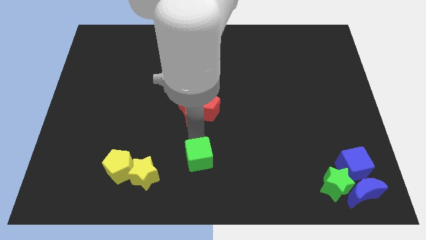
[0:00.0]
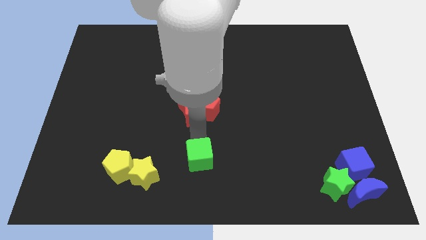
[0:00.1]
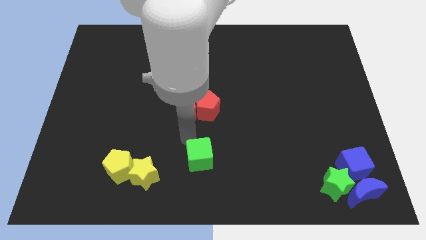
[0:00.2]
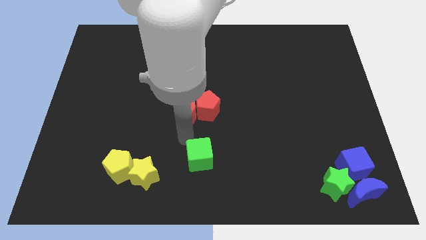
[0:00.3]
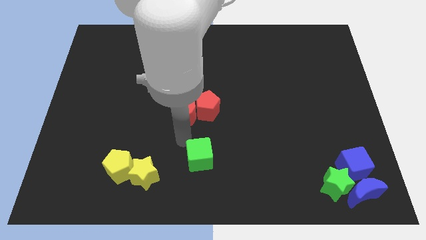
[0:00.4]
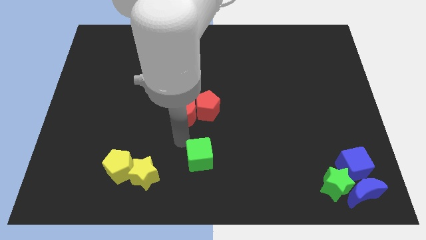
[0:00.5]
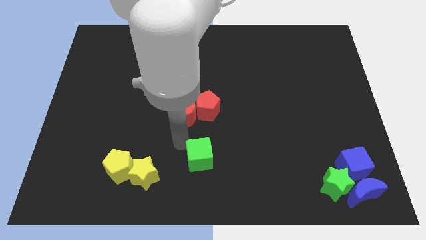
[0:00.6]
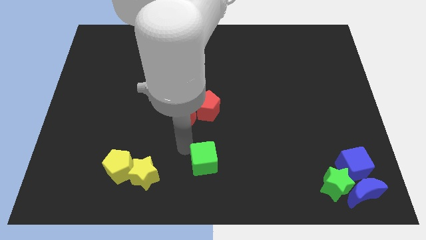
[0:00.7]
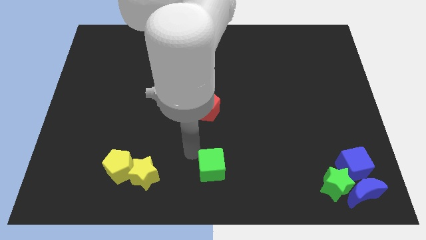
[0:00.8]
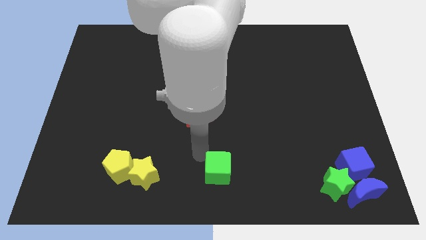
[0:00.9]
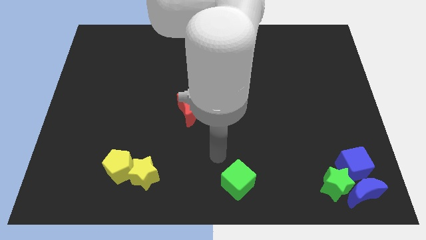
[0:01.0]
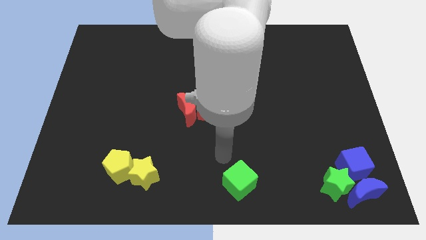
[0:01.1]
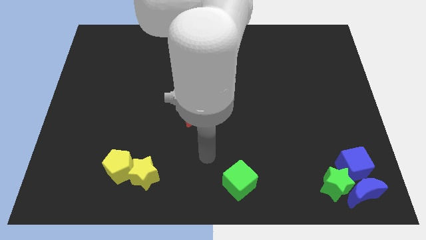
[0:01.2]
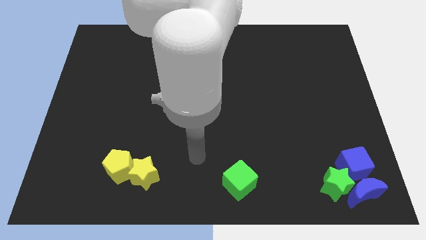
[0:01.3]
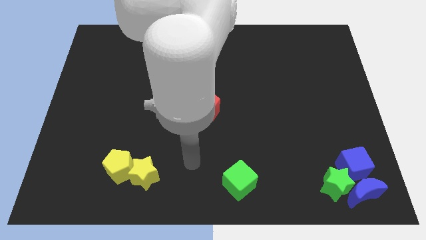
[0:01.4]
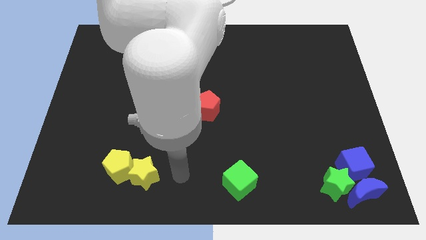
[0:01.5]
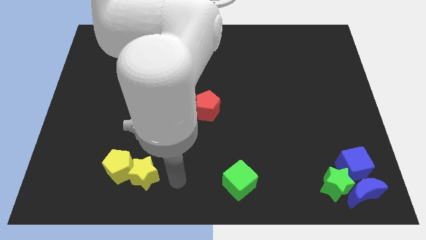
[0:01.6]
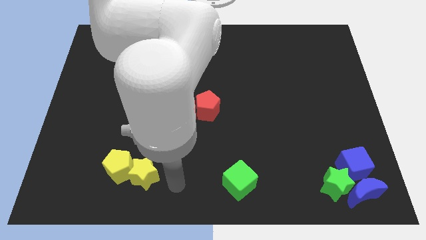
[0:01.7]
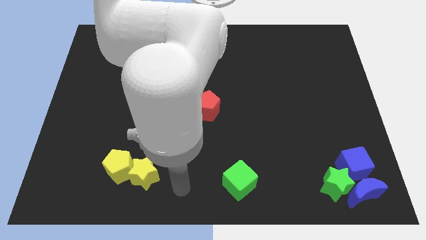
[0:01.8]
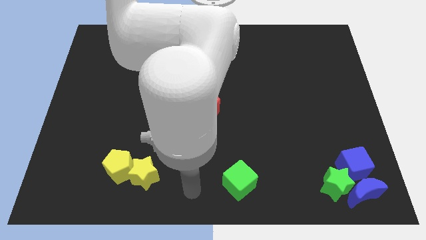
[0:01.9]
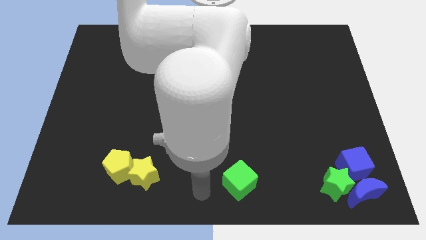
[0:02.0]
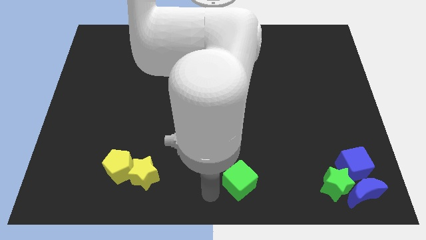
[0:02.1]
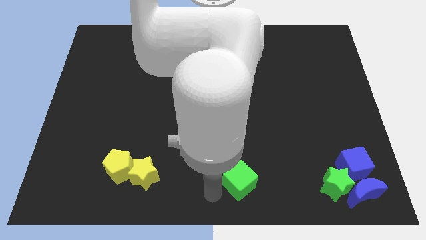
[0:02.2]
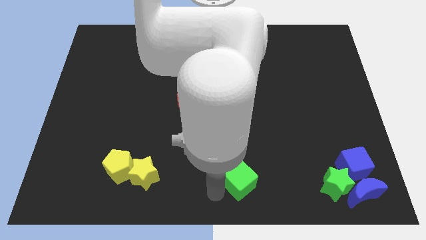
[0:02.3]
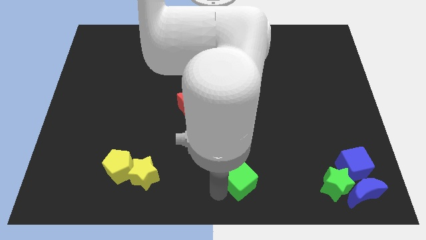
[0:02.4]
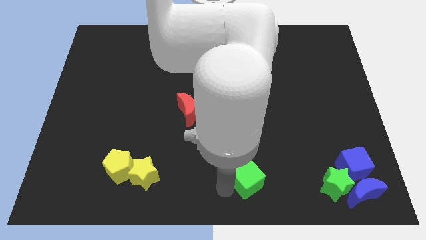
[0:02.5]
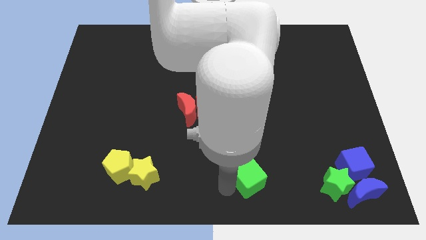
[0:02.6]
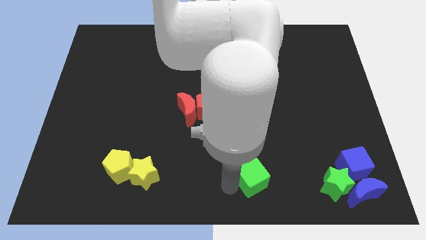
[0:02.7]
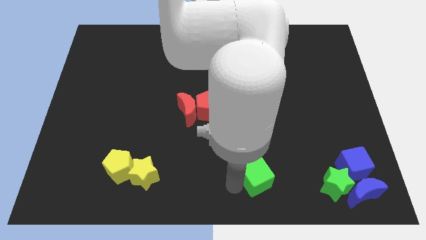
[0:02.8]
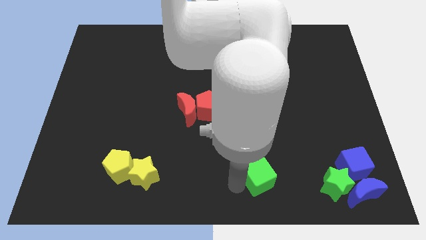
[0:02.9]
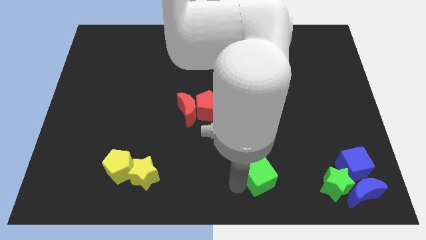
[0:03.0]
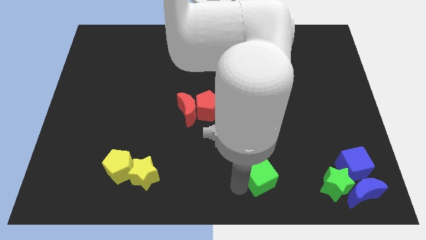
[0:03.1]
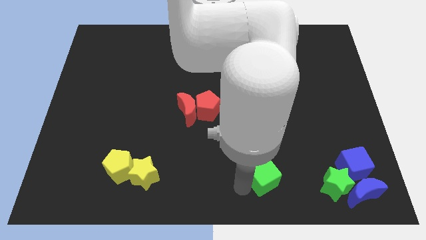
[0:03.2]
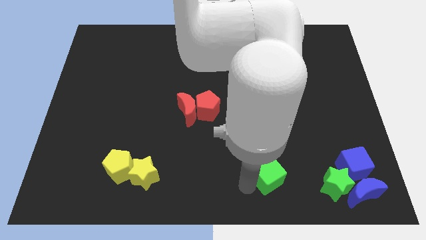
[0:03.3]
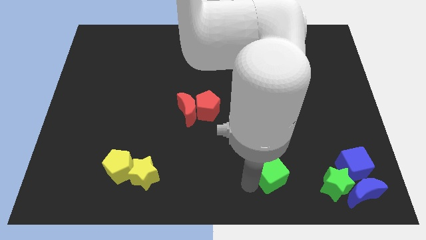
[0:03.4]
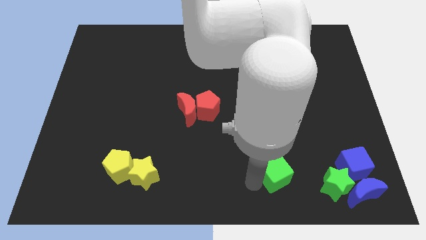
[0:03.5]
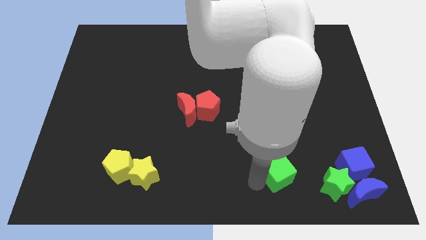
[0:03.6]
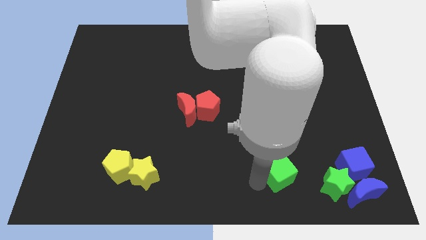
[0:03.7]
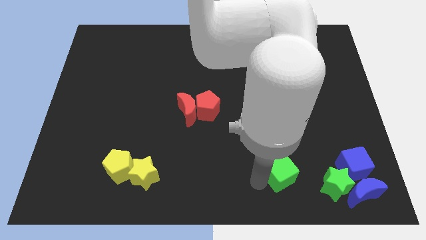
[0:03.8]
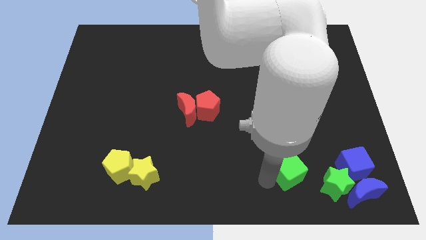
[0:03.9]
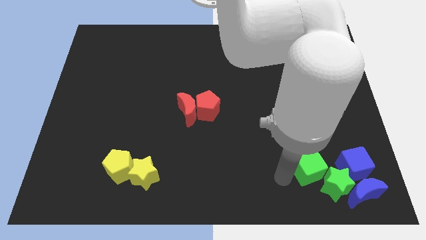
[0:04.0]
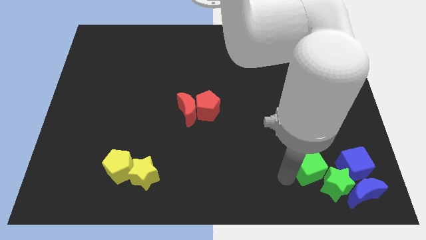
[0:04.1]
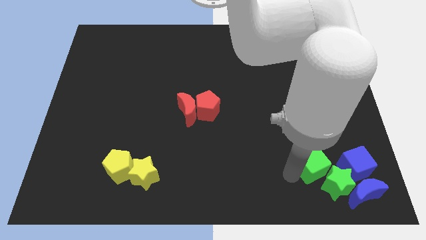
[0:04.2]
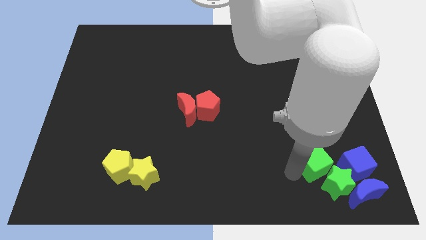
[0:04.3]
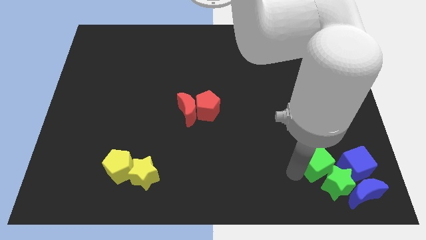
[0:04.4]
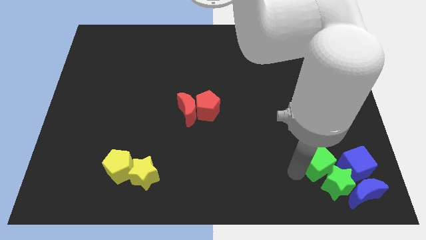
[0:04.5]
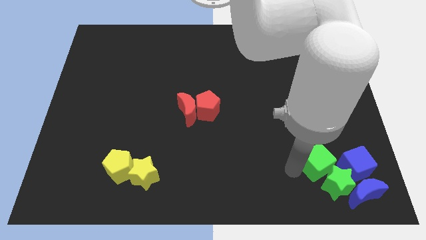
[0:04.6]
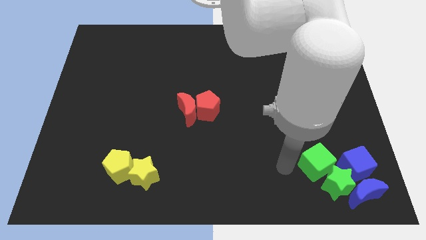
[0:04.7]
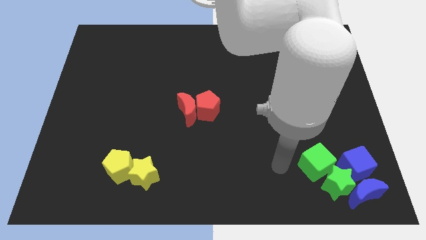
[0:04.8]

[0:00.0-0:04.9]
place the green cube above the green star

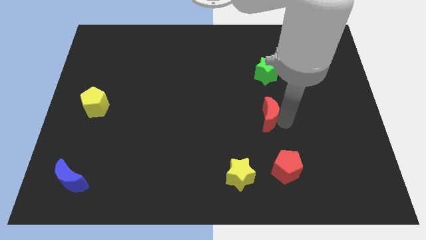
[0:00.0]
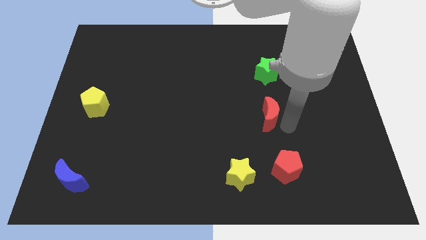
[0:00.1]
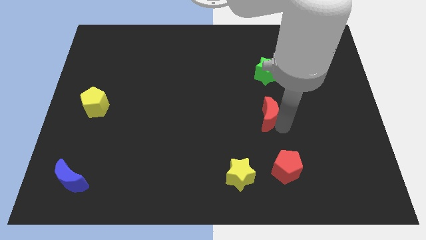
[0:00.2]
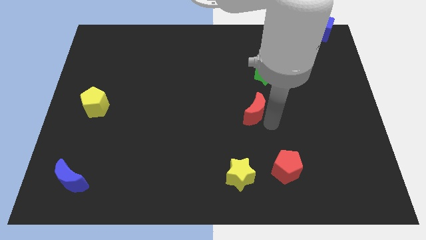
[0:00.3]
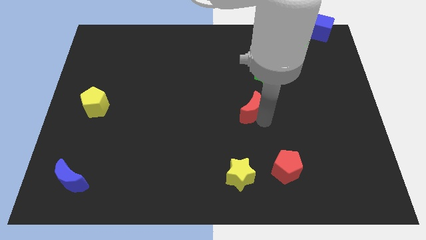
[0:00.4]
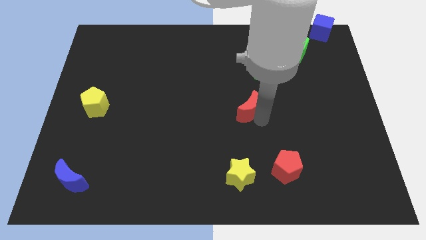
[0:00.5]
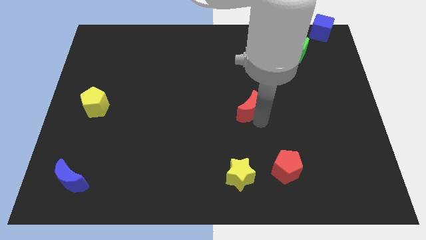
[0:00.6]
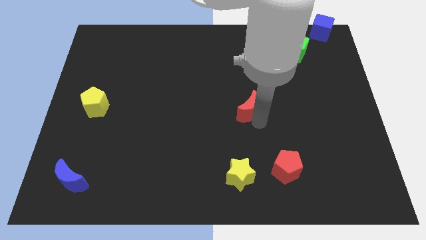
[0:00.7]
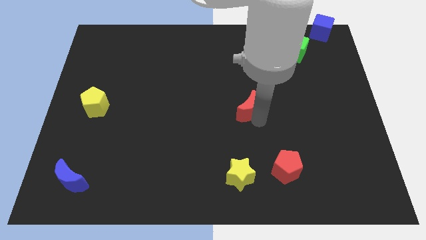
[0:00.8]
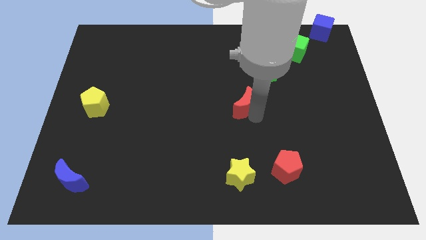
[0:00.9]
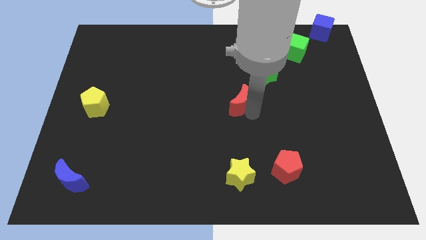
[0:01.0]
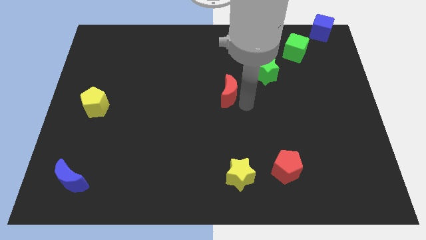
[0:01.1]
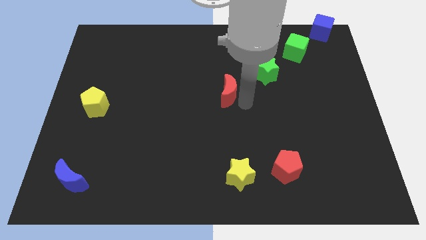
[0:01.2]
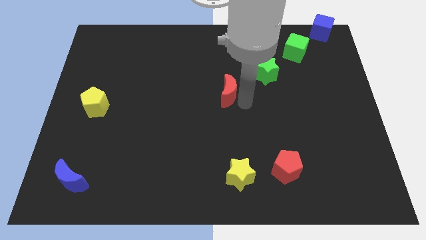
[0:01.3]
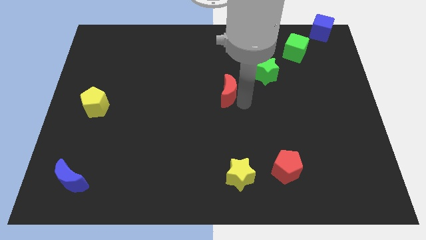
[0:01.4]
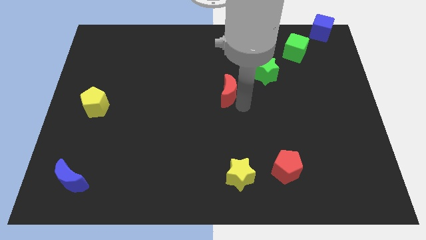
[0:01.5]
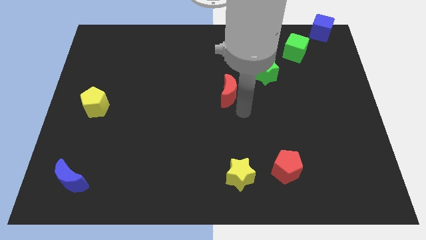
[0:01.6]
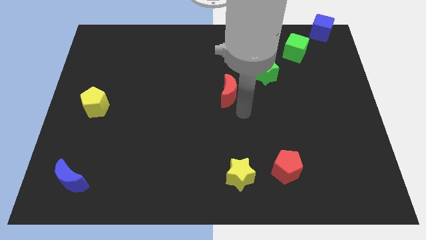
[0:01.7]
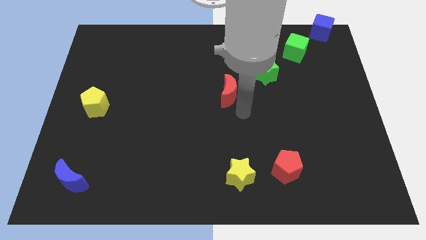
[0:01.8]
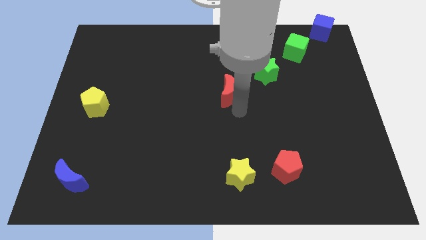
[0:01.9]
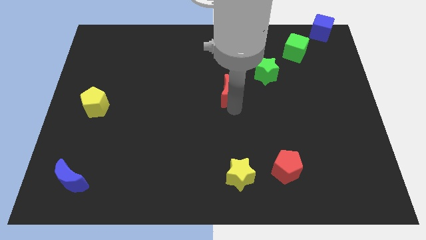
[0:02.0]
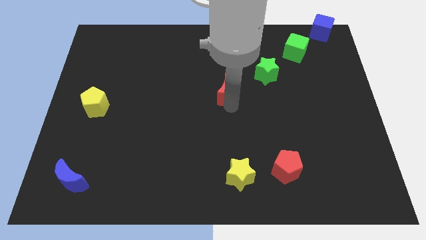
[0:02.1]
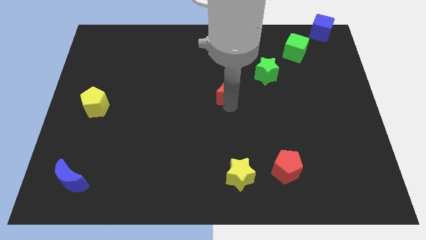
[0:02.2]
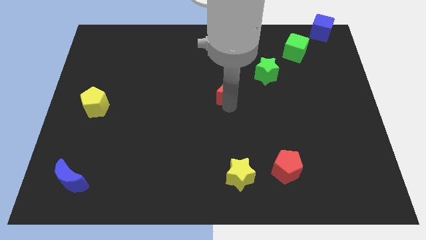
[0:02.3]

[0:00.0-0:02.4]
put the red crescent parallel to the yellow pentagon

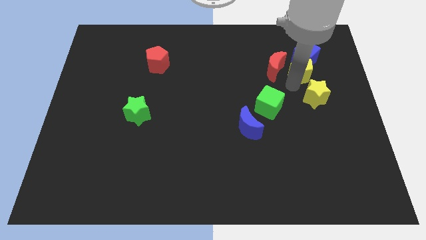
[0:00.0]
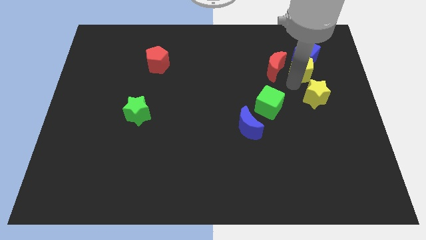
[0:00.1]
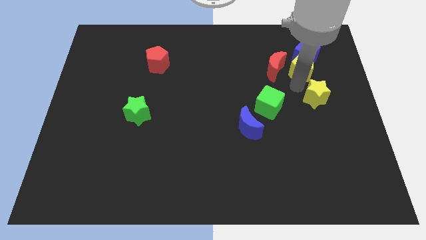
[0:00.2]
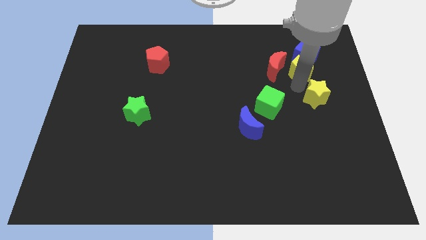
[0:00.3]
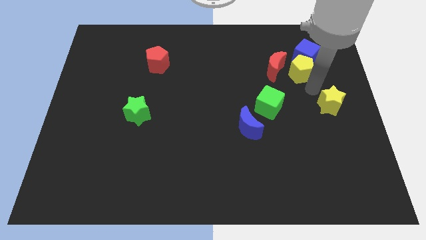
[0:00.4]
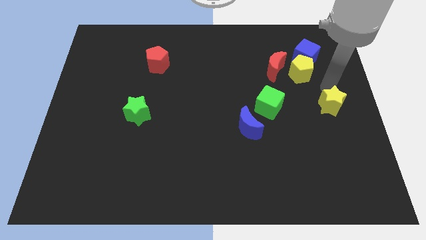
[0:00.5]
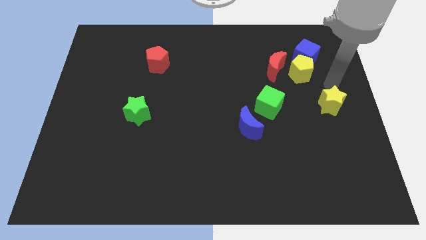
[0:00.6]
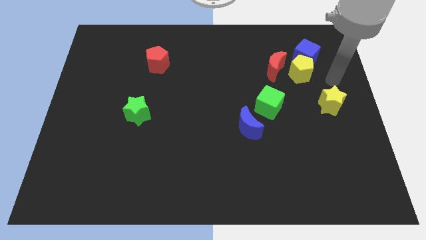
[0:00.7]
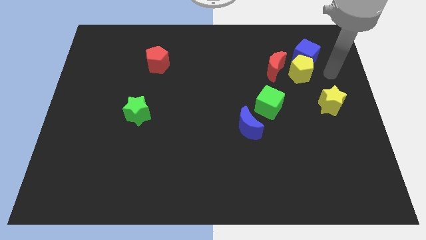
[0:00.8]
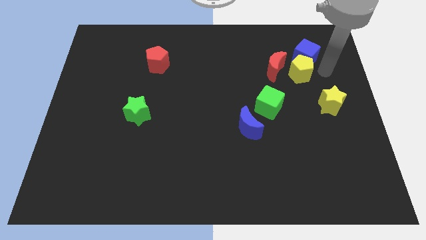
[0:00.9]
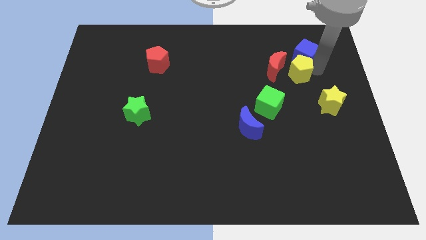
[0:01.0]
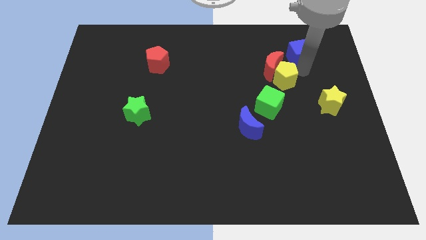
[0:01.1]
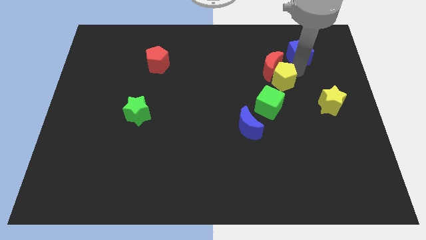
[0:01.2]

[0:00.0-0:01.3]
separate yellow star and the yellow pentagon

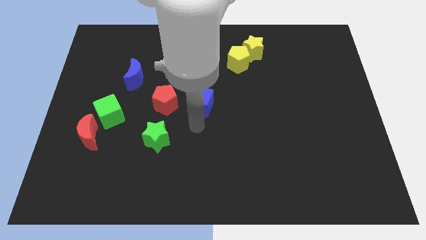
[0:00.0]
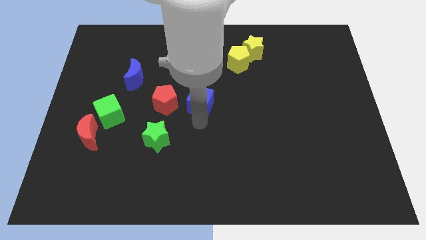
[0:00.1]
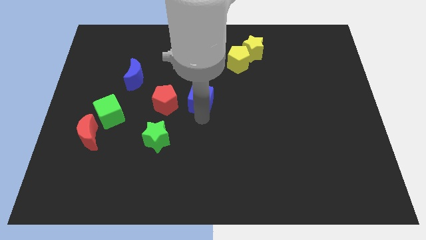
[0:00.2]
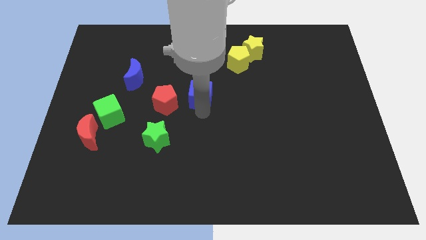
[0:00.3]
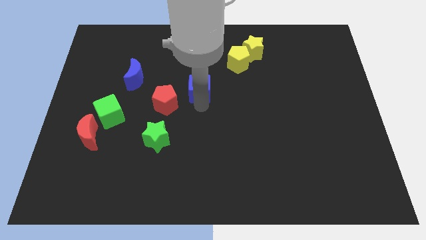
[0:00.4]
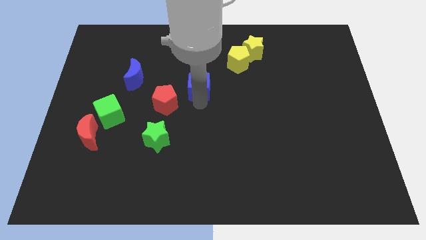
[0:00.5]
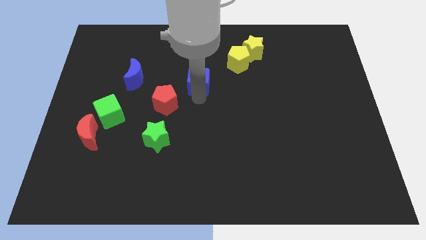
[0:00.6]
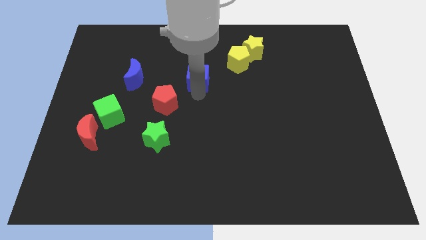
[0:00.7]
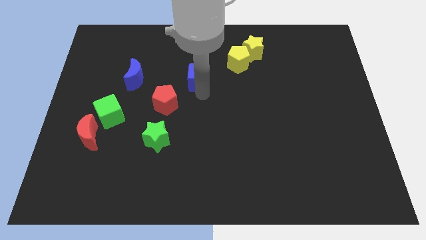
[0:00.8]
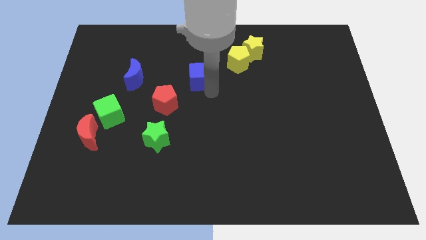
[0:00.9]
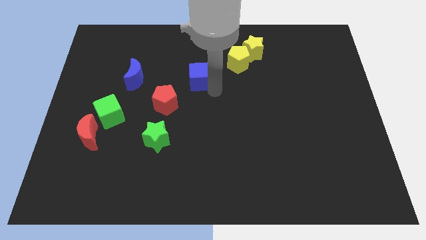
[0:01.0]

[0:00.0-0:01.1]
place the blue cube in between the yellow pentagon and red pentagon
